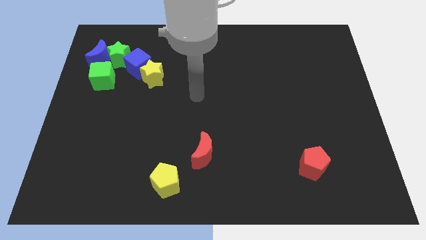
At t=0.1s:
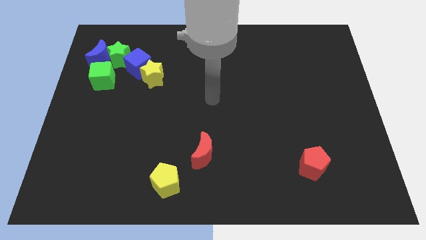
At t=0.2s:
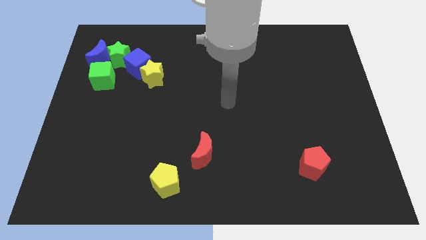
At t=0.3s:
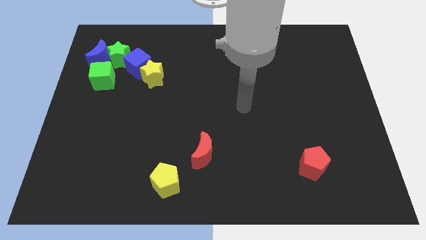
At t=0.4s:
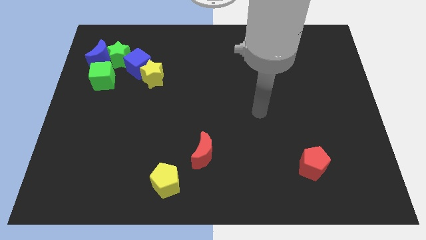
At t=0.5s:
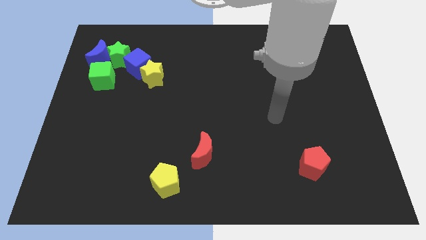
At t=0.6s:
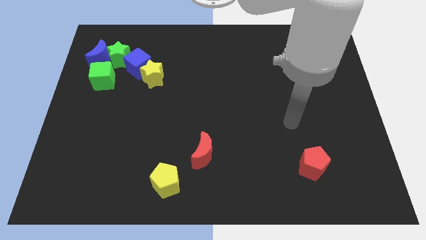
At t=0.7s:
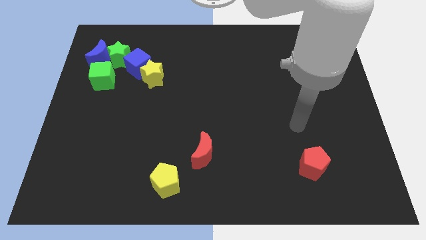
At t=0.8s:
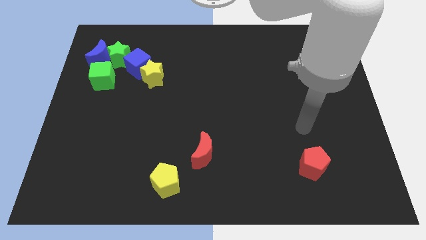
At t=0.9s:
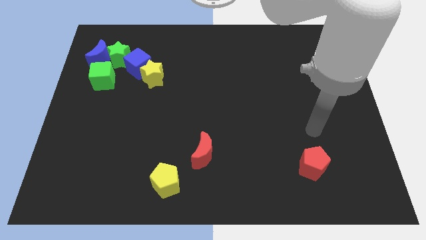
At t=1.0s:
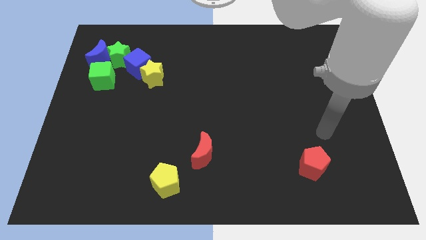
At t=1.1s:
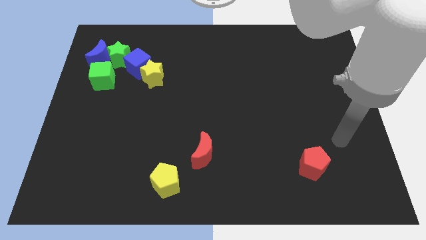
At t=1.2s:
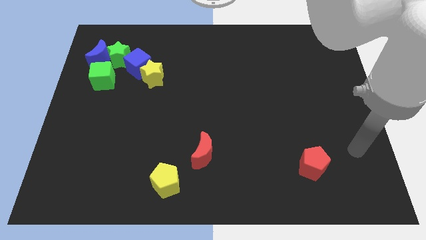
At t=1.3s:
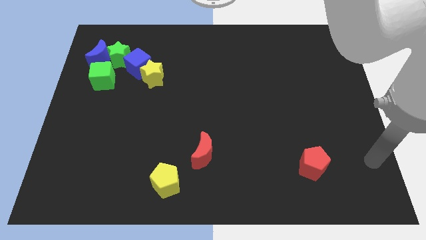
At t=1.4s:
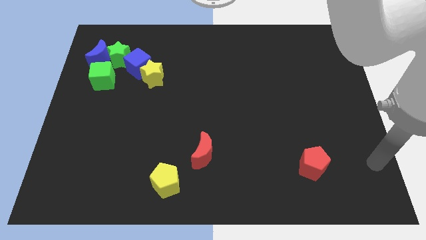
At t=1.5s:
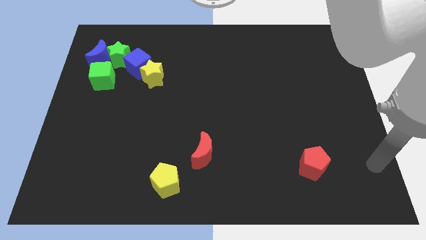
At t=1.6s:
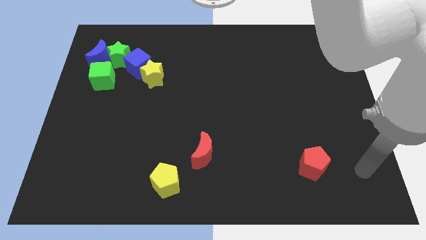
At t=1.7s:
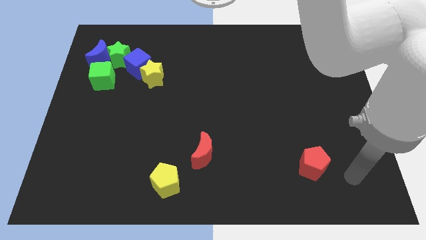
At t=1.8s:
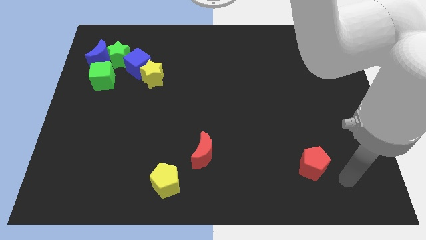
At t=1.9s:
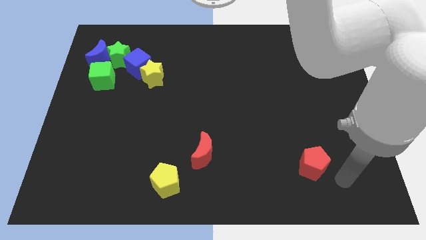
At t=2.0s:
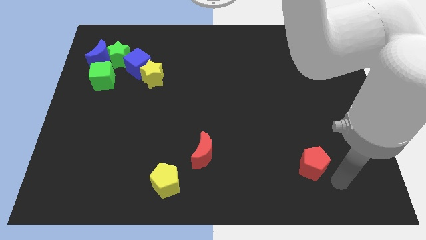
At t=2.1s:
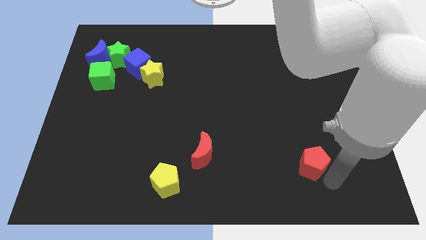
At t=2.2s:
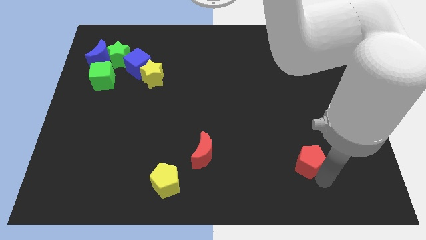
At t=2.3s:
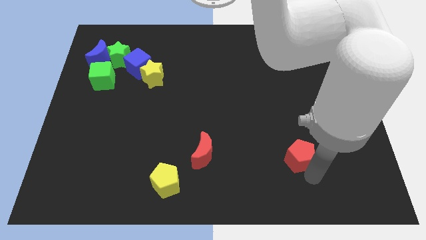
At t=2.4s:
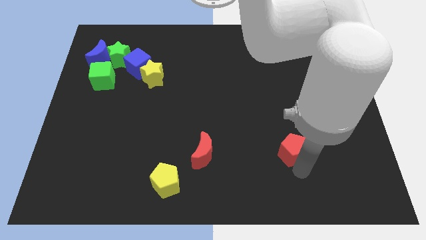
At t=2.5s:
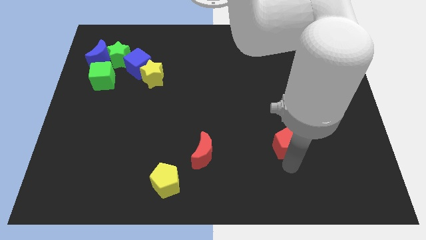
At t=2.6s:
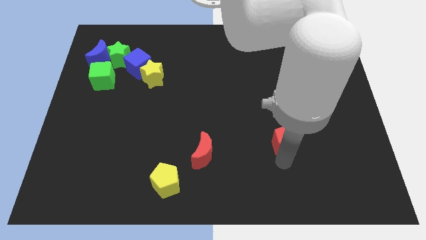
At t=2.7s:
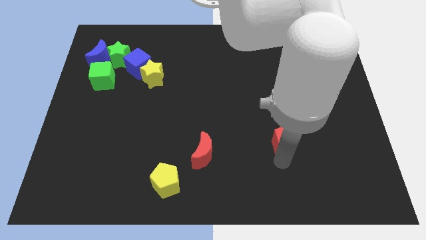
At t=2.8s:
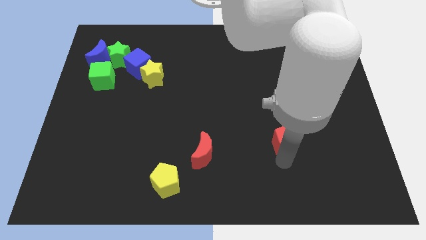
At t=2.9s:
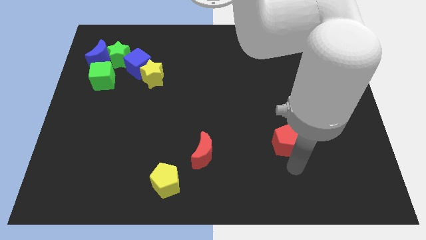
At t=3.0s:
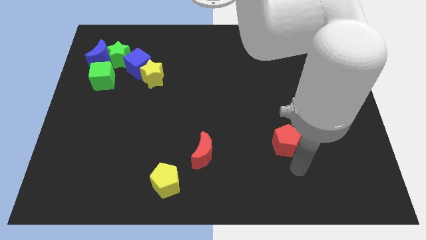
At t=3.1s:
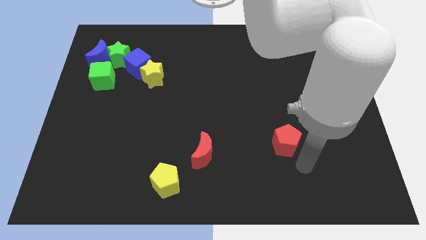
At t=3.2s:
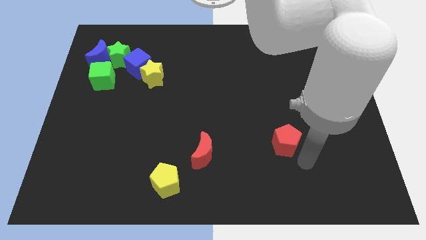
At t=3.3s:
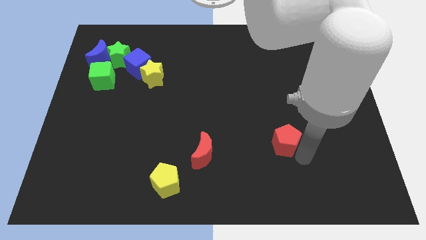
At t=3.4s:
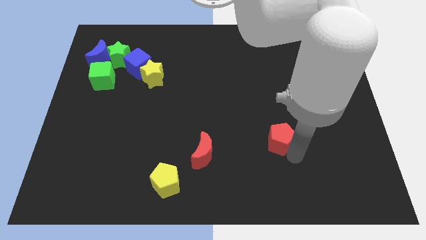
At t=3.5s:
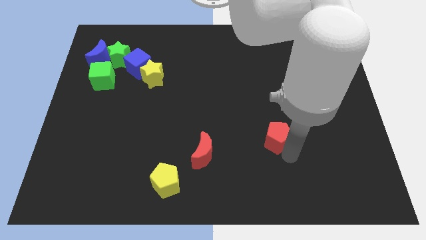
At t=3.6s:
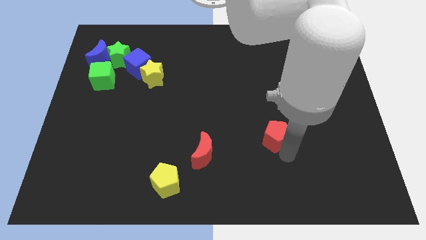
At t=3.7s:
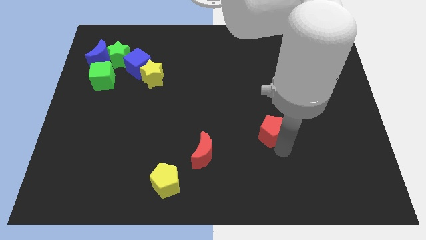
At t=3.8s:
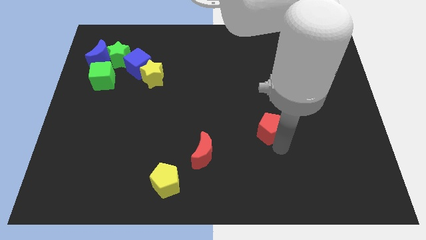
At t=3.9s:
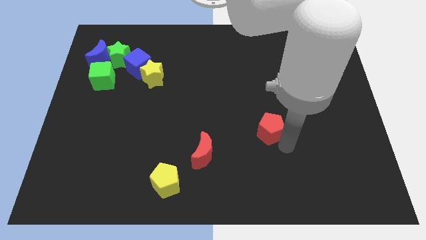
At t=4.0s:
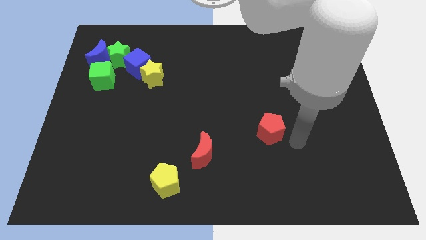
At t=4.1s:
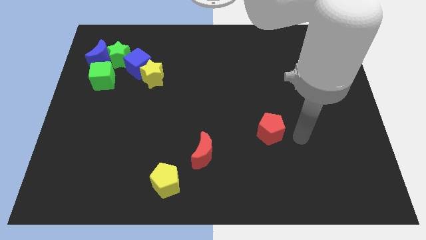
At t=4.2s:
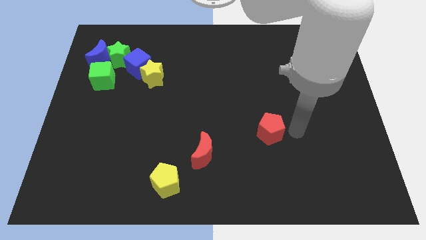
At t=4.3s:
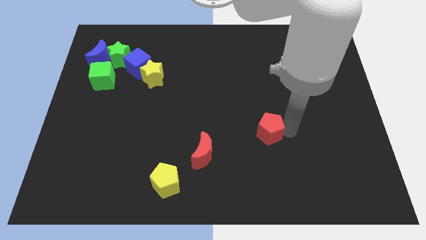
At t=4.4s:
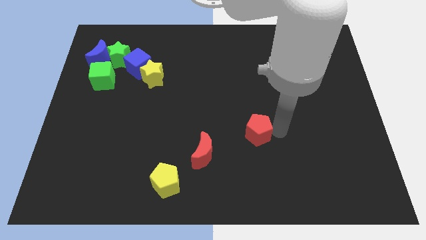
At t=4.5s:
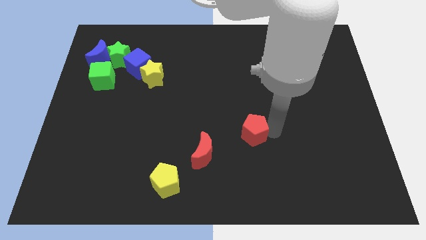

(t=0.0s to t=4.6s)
drag the red pentagon towards the top side of the red moon

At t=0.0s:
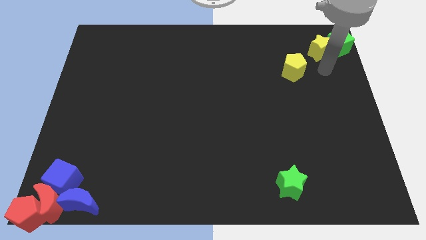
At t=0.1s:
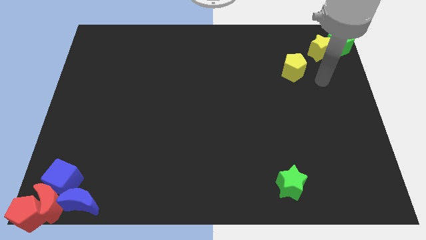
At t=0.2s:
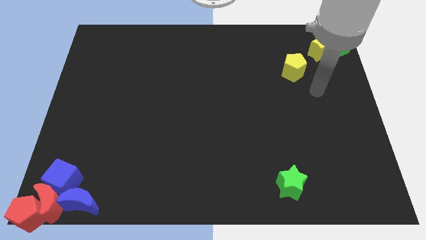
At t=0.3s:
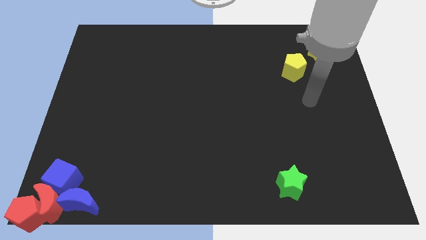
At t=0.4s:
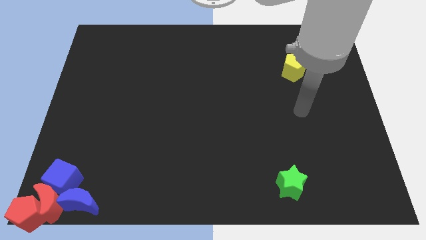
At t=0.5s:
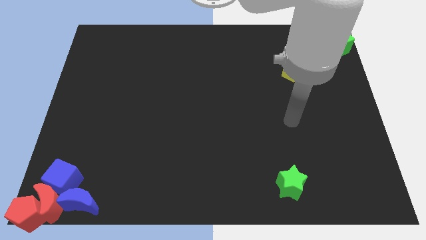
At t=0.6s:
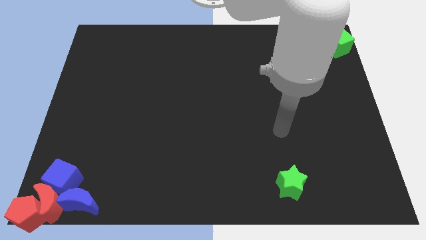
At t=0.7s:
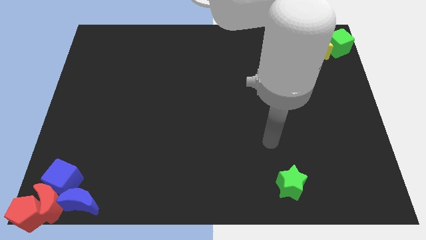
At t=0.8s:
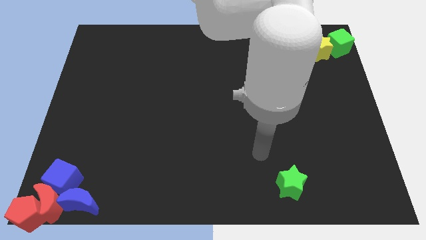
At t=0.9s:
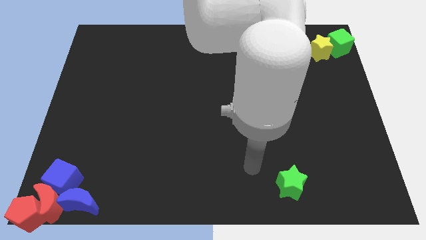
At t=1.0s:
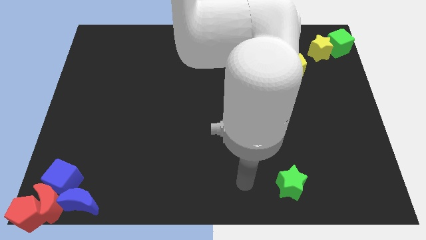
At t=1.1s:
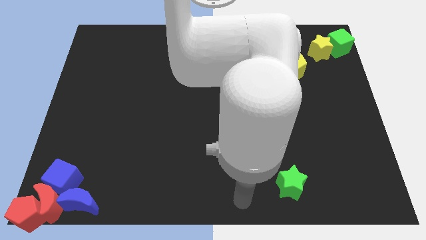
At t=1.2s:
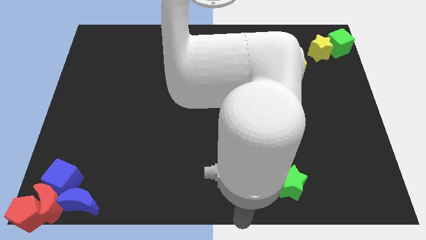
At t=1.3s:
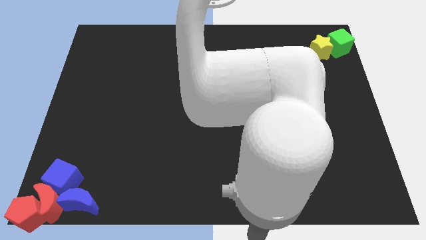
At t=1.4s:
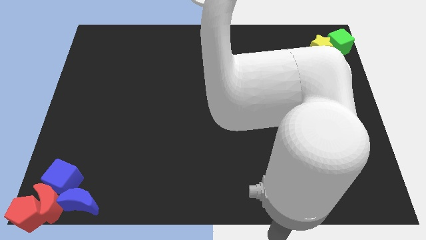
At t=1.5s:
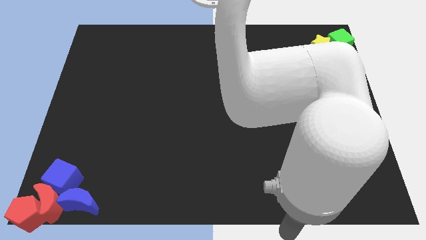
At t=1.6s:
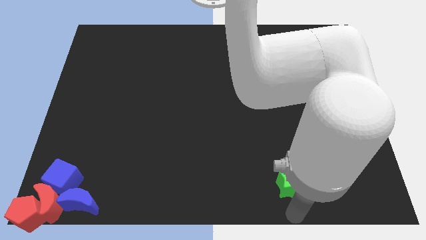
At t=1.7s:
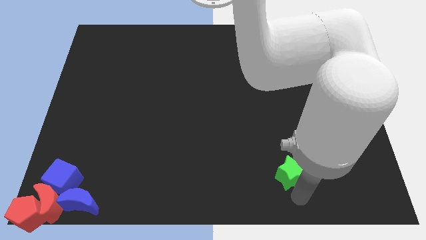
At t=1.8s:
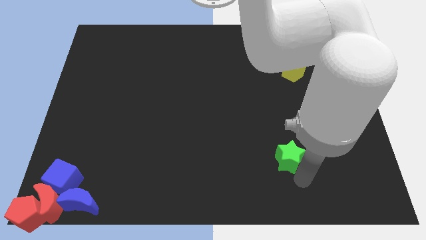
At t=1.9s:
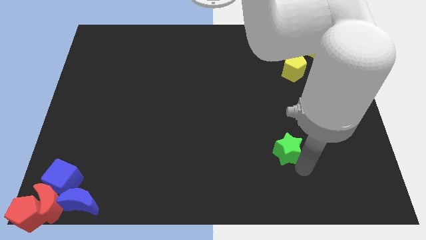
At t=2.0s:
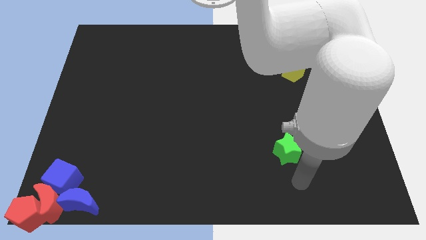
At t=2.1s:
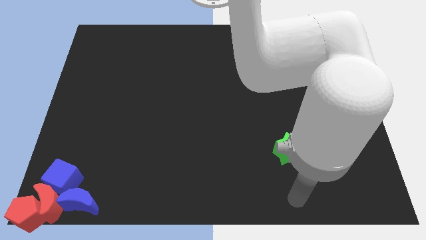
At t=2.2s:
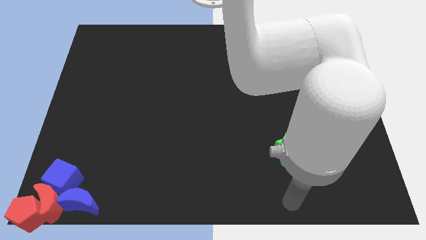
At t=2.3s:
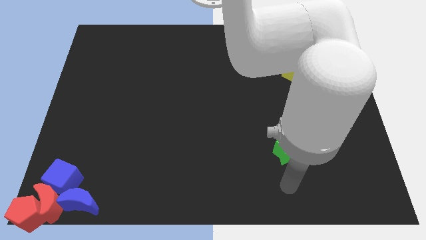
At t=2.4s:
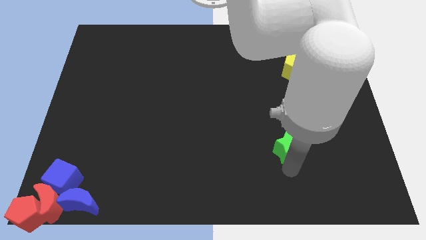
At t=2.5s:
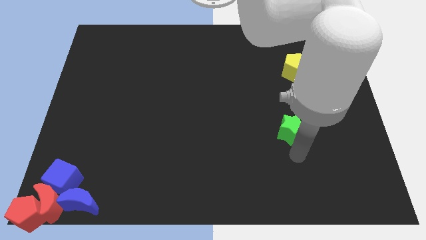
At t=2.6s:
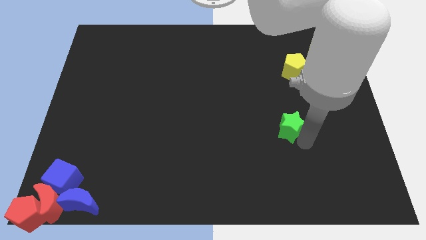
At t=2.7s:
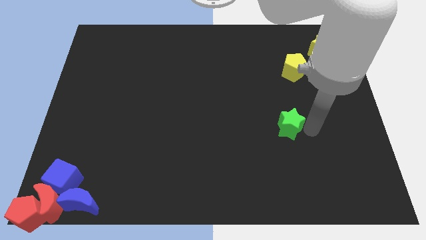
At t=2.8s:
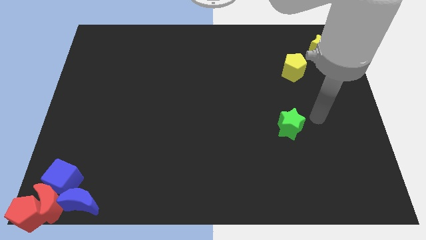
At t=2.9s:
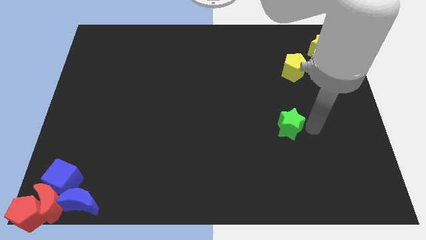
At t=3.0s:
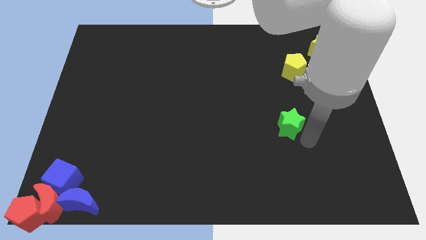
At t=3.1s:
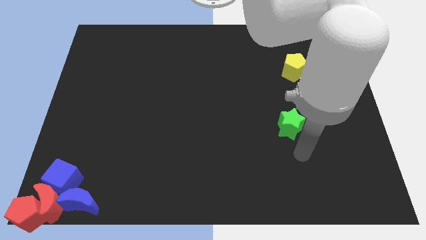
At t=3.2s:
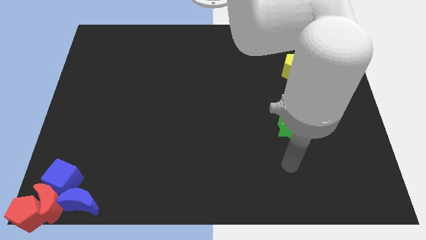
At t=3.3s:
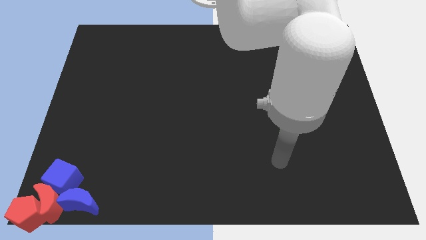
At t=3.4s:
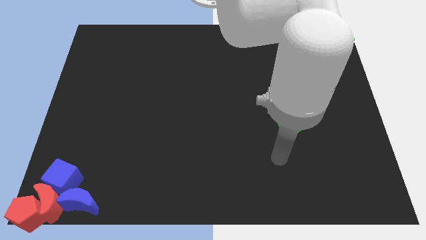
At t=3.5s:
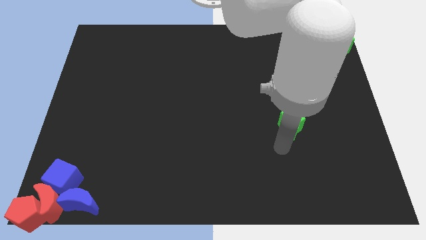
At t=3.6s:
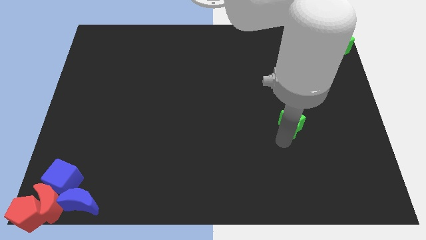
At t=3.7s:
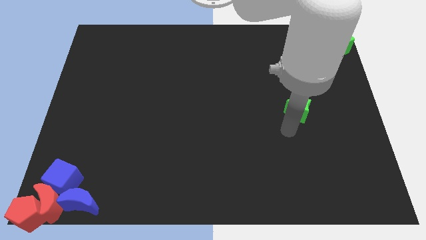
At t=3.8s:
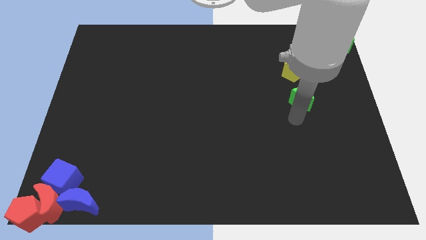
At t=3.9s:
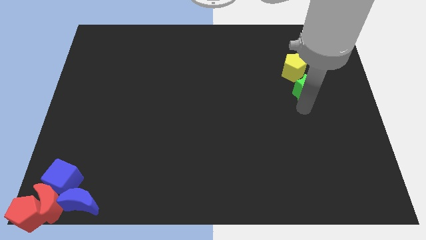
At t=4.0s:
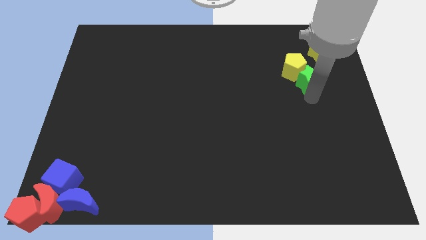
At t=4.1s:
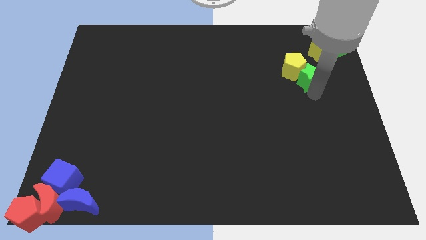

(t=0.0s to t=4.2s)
move the green star into the yellow pentagon
